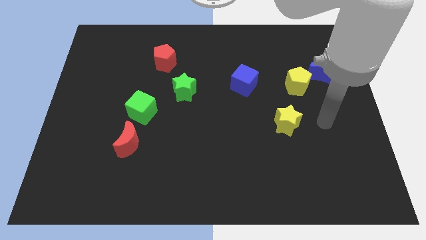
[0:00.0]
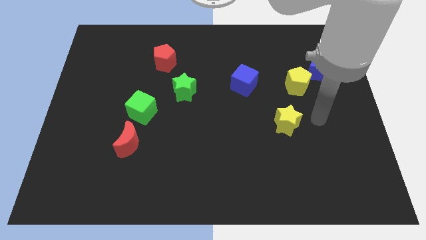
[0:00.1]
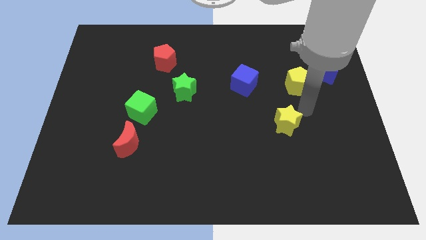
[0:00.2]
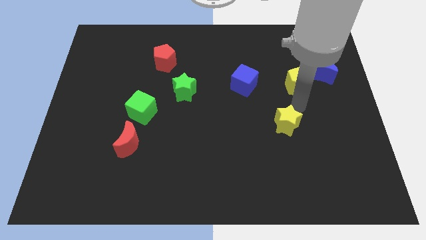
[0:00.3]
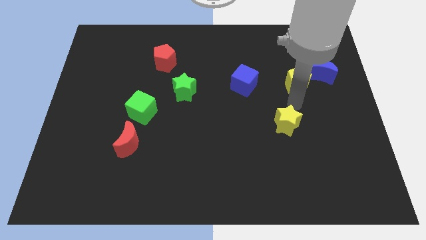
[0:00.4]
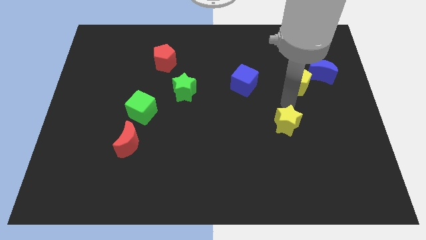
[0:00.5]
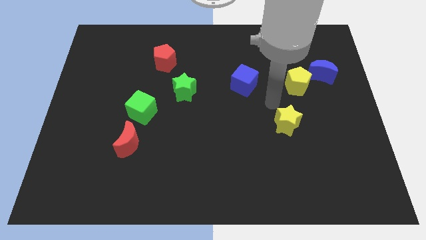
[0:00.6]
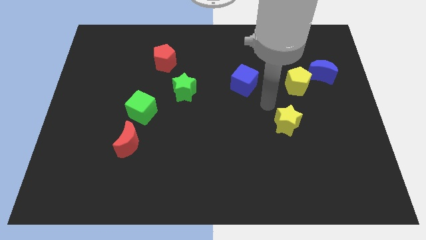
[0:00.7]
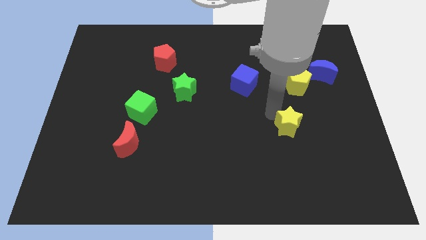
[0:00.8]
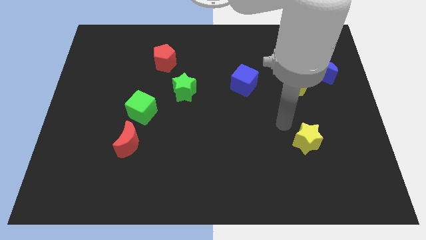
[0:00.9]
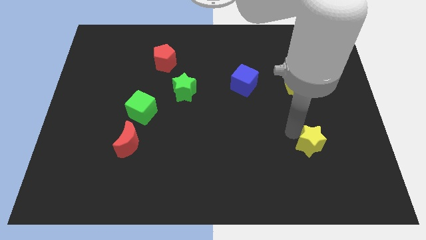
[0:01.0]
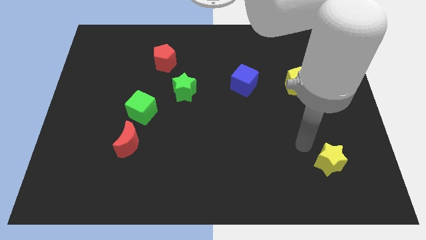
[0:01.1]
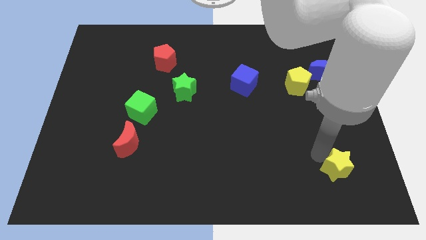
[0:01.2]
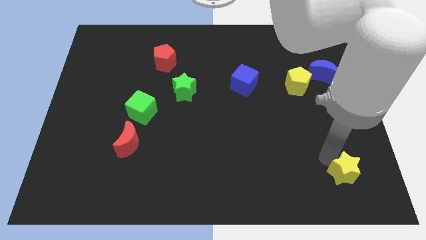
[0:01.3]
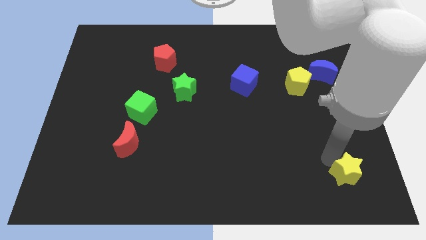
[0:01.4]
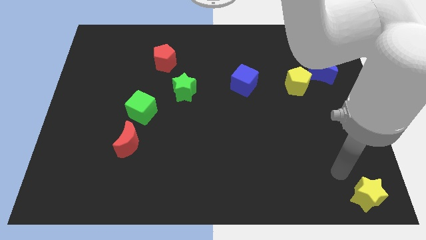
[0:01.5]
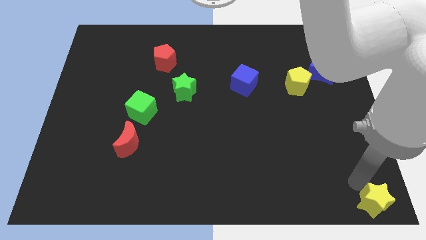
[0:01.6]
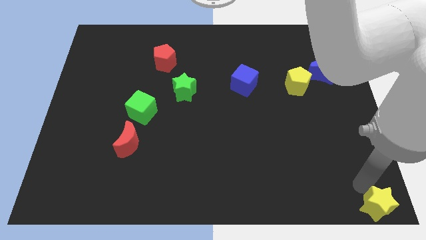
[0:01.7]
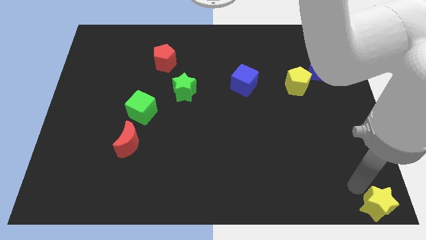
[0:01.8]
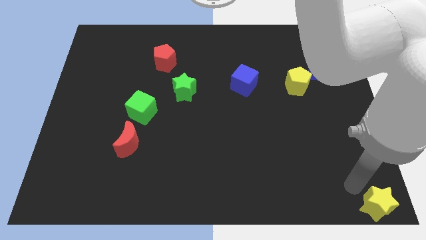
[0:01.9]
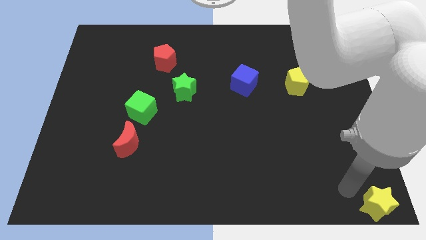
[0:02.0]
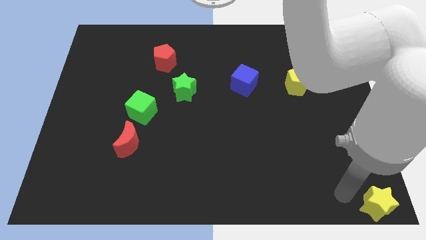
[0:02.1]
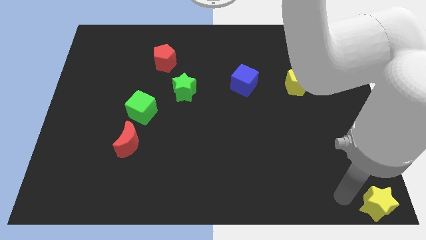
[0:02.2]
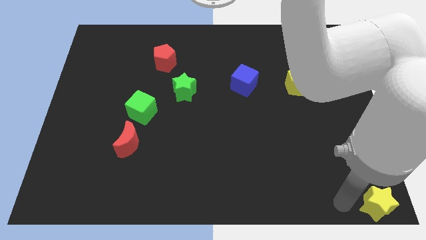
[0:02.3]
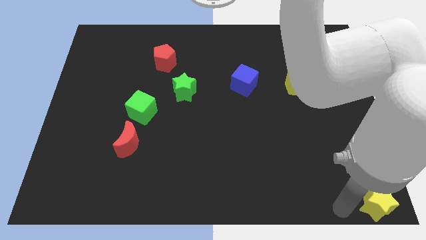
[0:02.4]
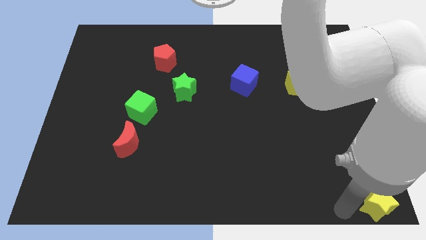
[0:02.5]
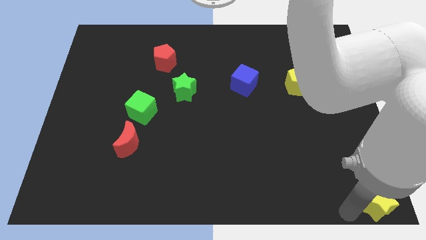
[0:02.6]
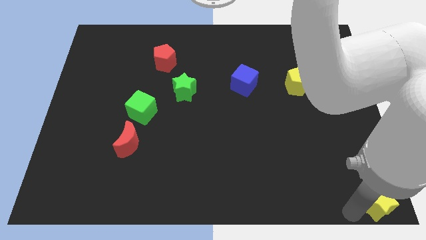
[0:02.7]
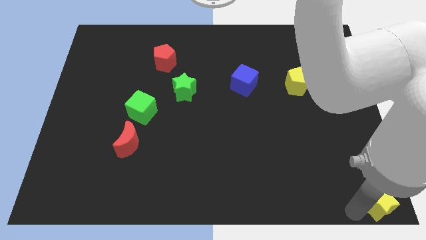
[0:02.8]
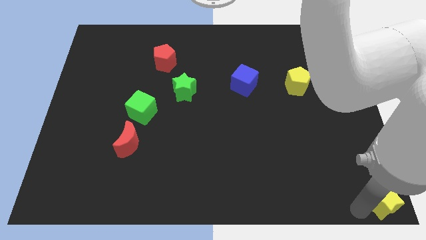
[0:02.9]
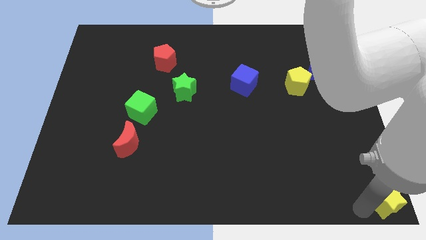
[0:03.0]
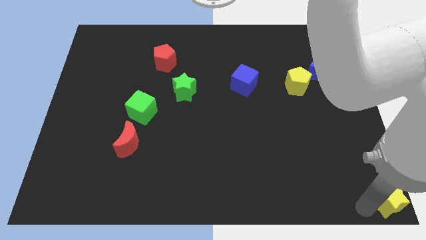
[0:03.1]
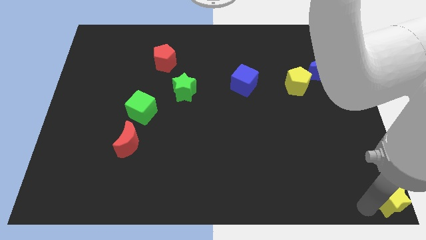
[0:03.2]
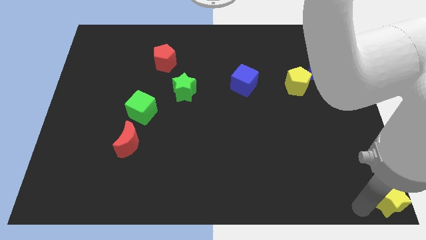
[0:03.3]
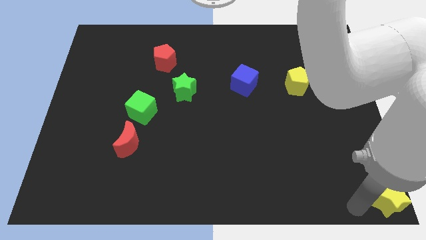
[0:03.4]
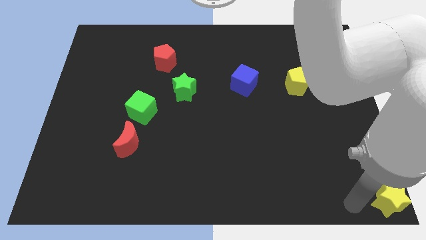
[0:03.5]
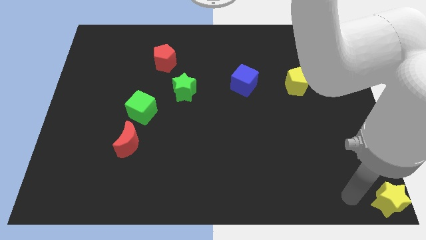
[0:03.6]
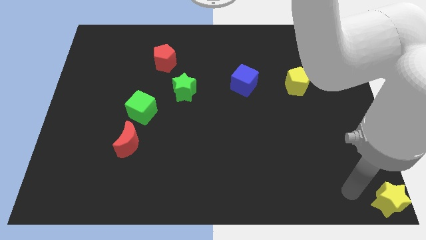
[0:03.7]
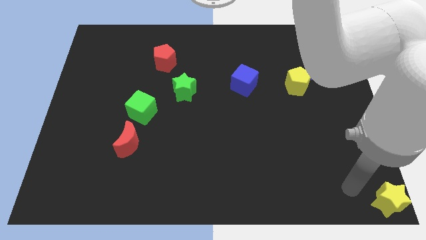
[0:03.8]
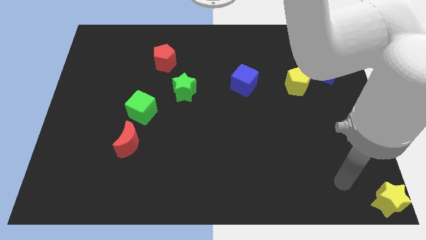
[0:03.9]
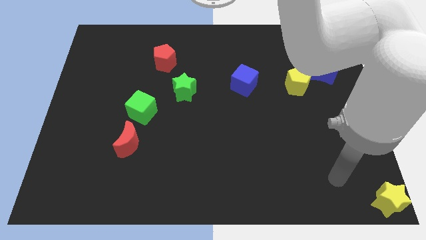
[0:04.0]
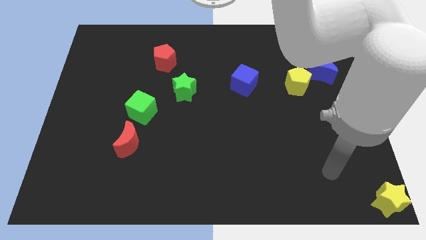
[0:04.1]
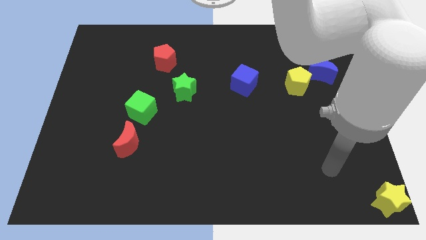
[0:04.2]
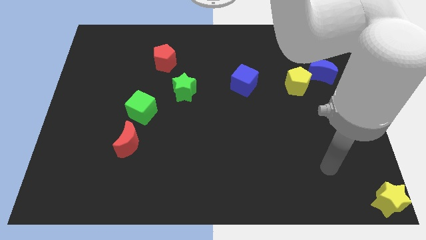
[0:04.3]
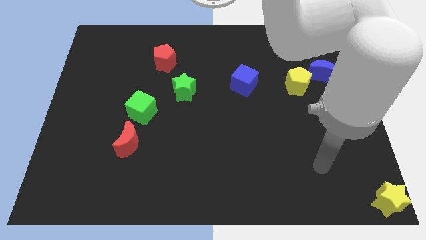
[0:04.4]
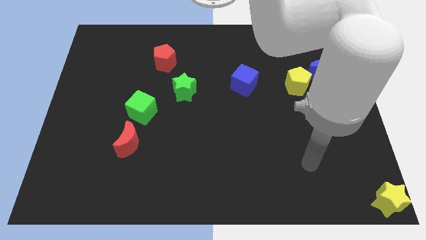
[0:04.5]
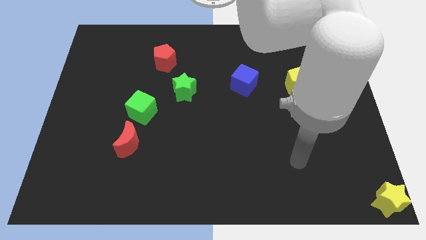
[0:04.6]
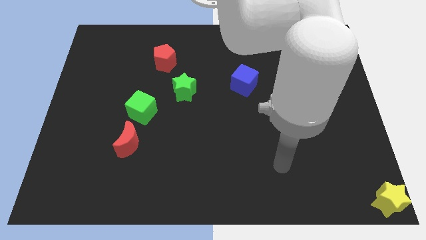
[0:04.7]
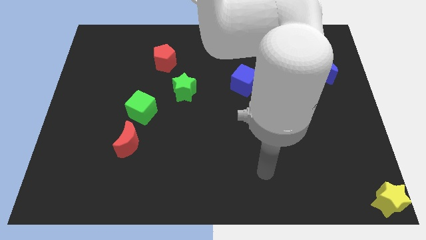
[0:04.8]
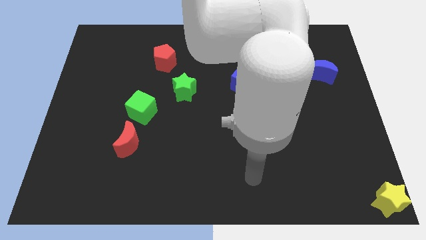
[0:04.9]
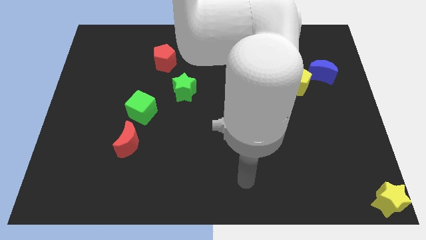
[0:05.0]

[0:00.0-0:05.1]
place the yellow star to the bottom right corner of the board

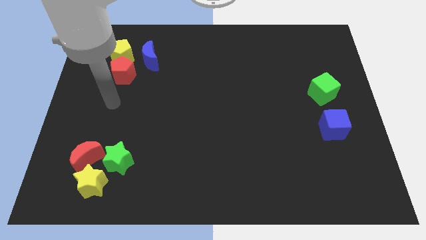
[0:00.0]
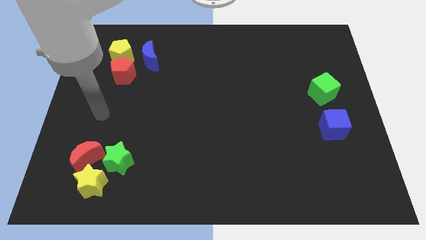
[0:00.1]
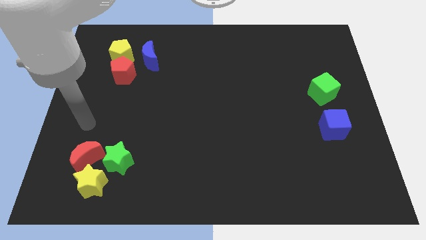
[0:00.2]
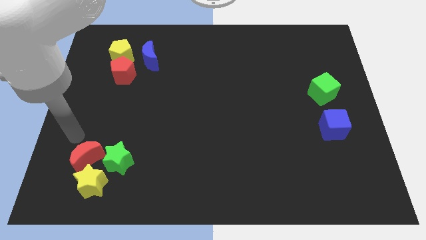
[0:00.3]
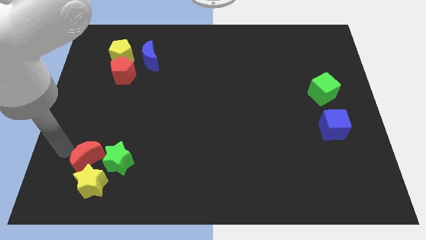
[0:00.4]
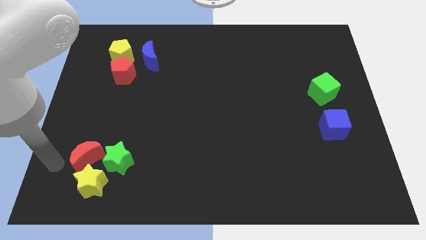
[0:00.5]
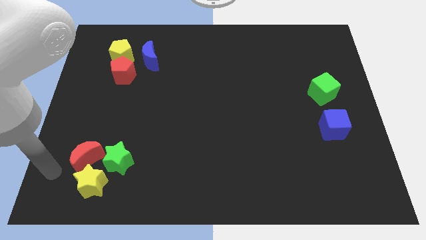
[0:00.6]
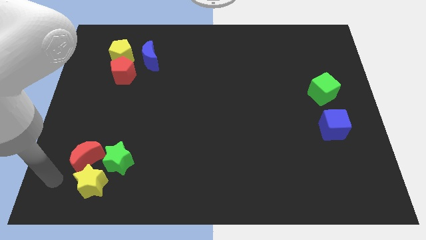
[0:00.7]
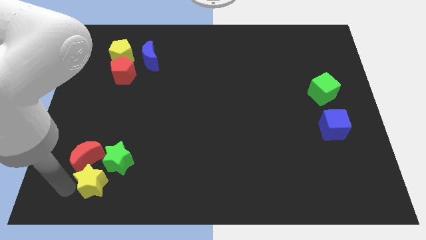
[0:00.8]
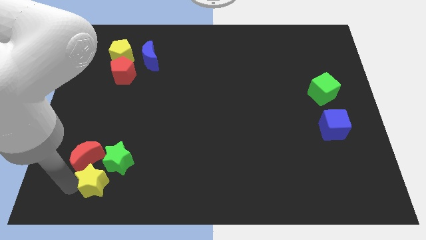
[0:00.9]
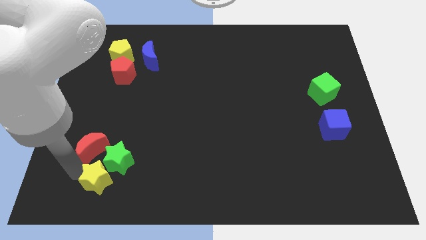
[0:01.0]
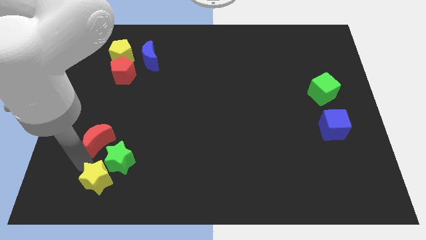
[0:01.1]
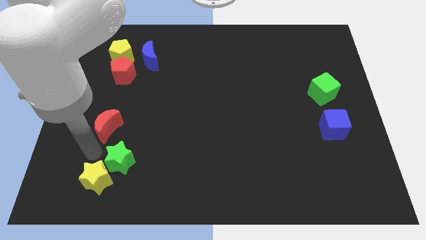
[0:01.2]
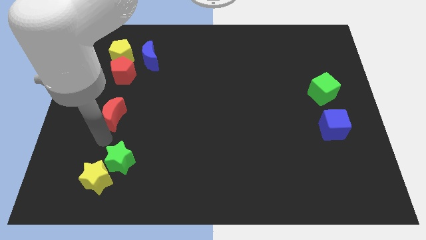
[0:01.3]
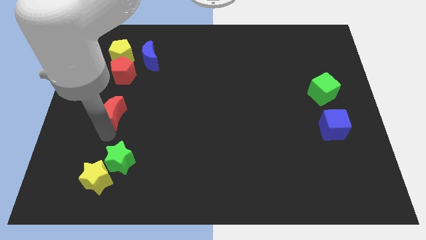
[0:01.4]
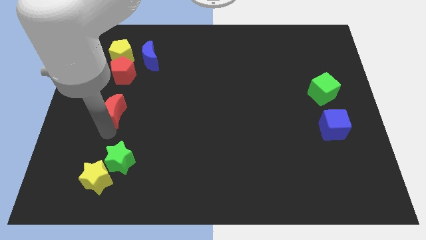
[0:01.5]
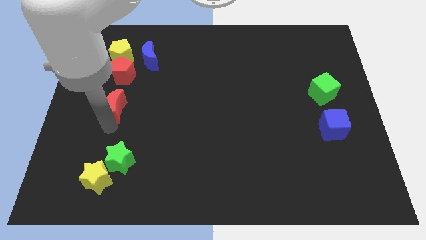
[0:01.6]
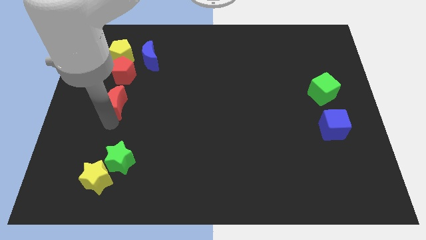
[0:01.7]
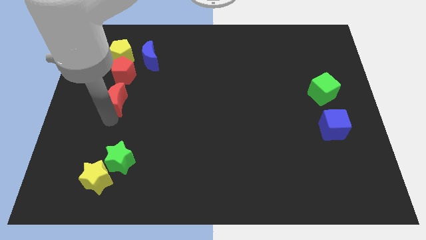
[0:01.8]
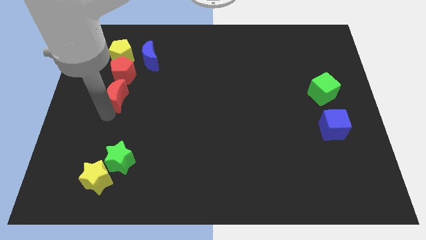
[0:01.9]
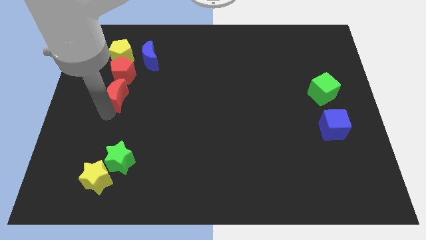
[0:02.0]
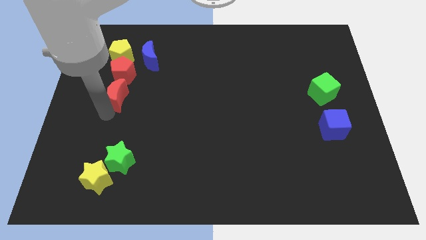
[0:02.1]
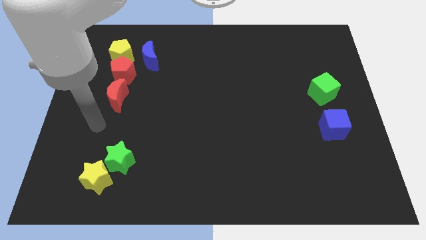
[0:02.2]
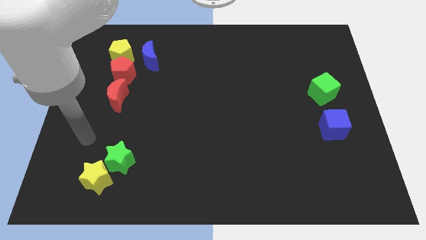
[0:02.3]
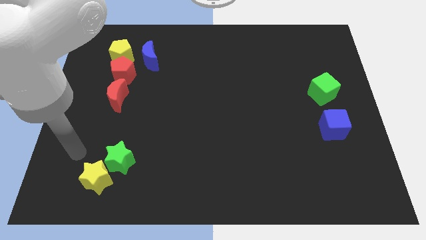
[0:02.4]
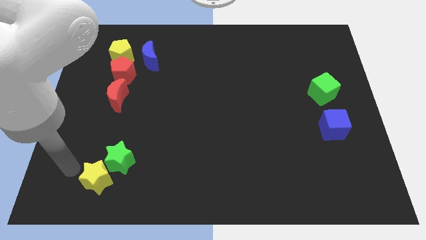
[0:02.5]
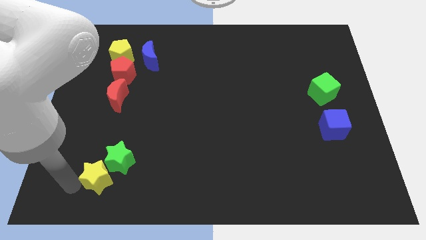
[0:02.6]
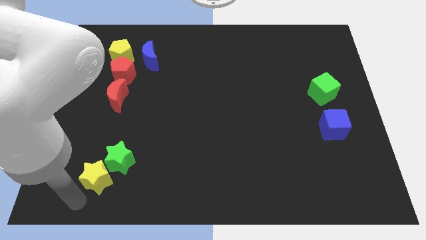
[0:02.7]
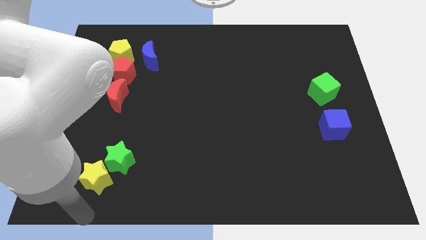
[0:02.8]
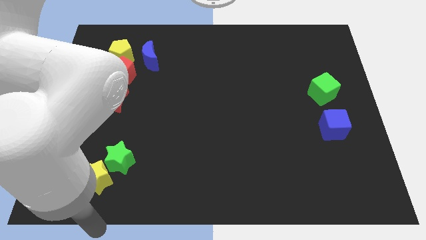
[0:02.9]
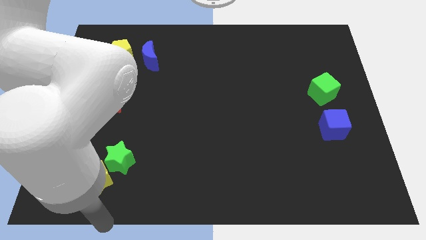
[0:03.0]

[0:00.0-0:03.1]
place red moon below red pentagon

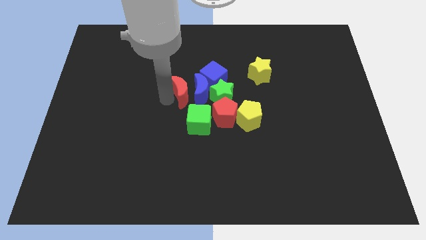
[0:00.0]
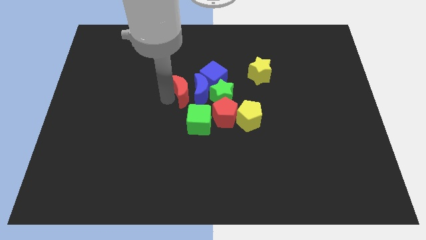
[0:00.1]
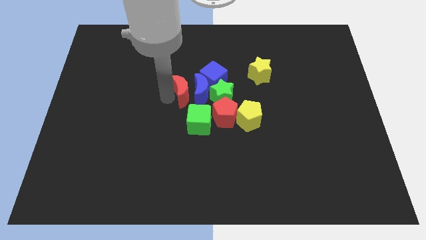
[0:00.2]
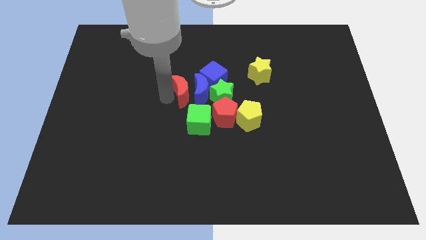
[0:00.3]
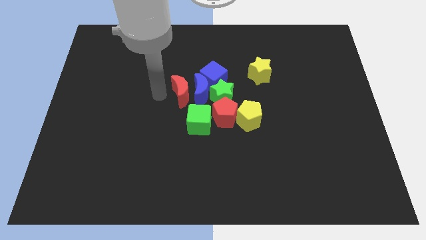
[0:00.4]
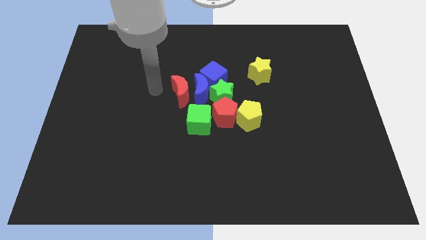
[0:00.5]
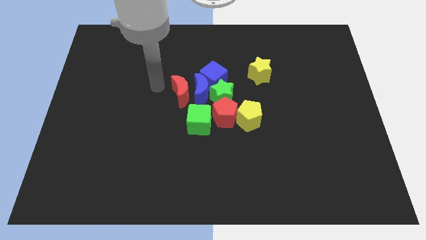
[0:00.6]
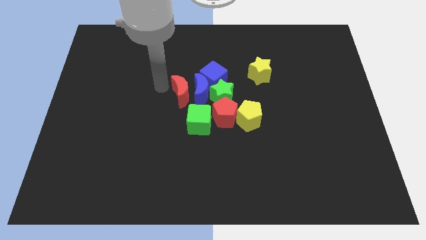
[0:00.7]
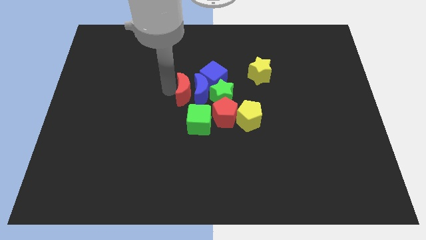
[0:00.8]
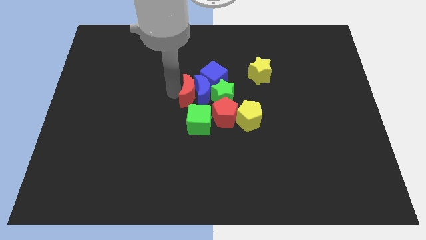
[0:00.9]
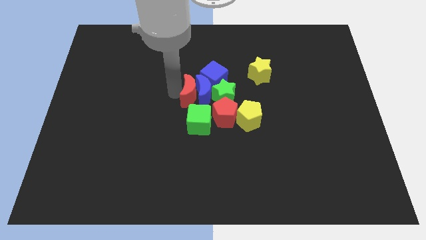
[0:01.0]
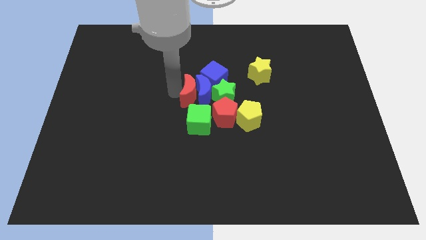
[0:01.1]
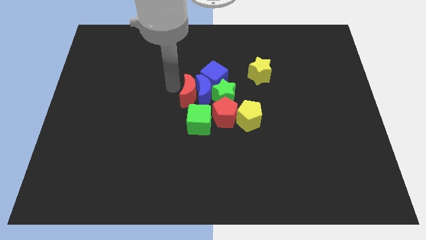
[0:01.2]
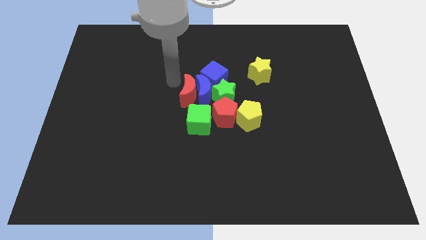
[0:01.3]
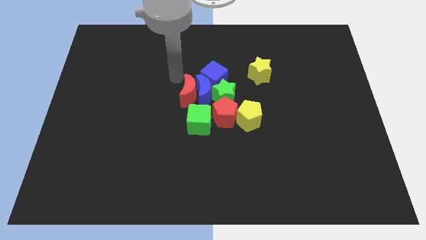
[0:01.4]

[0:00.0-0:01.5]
move the red crescent left side of the blue crescent
